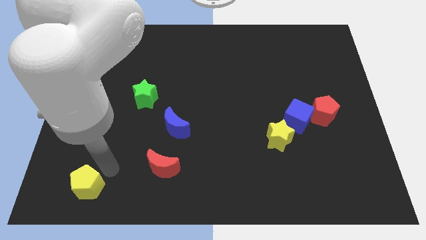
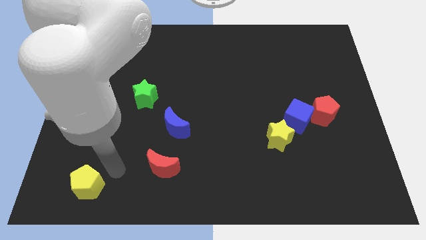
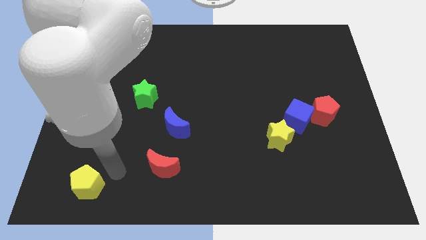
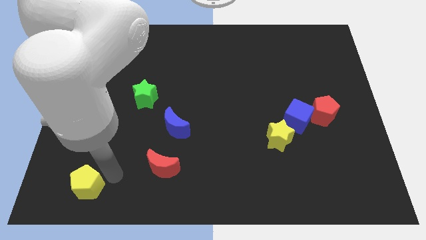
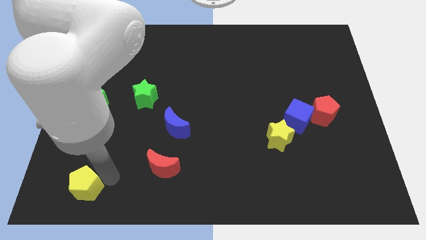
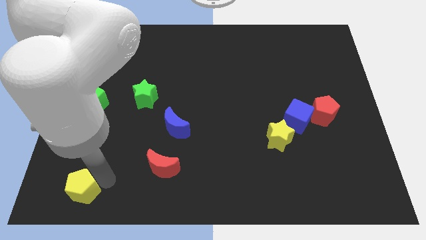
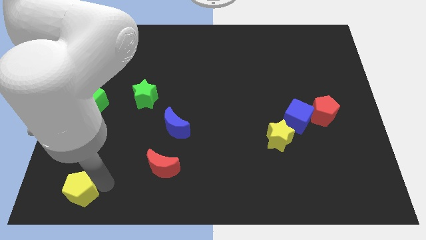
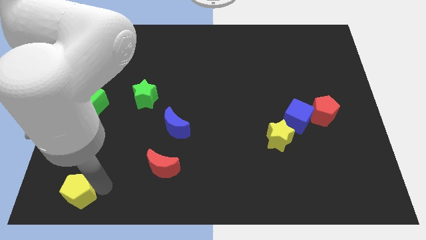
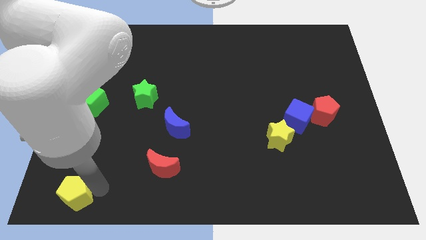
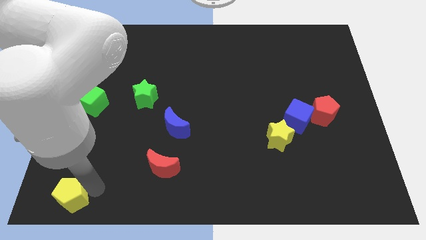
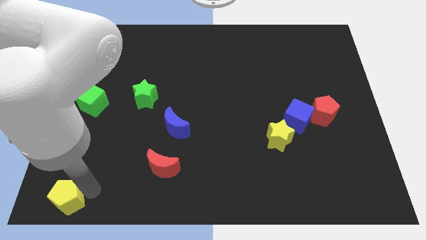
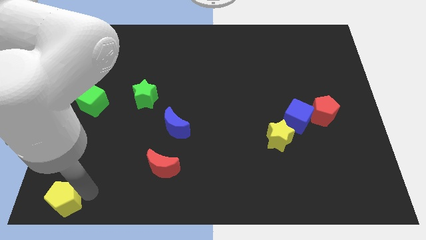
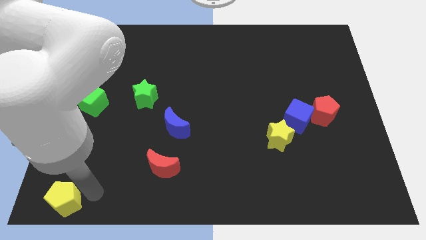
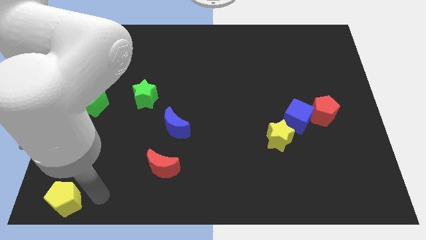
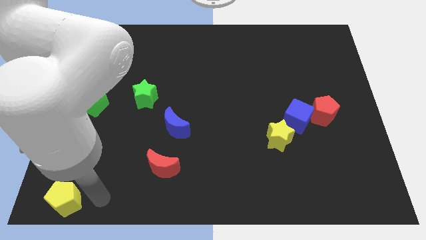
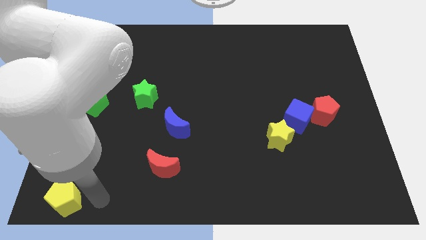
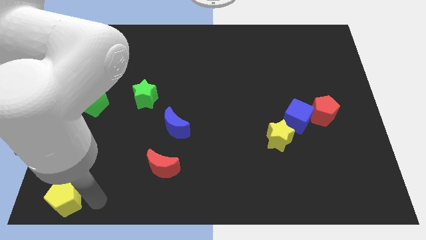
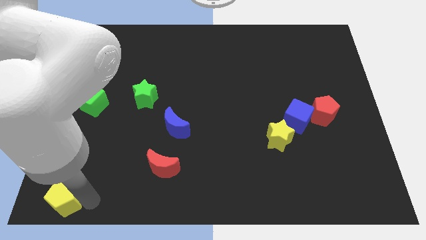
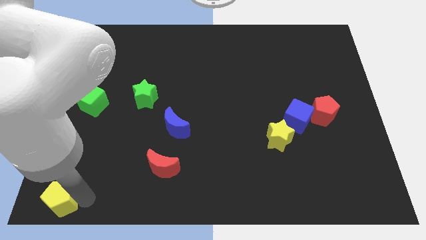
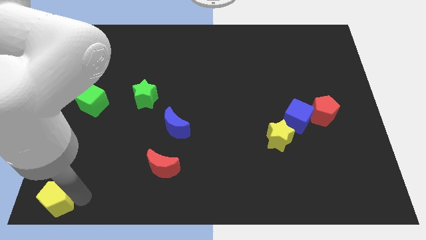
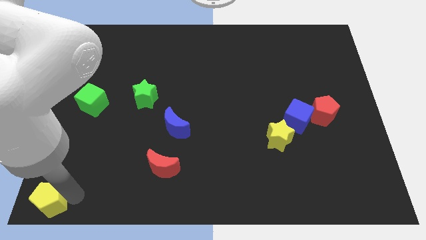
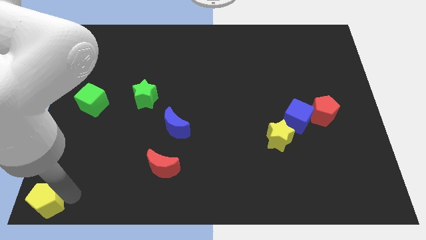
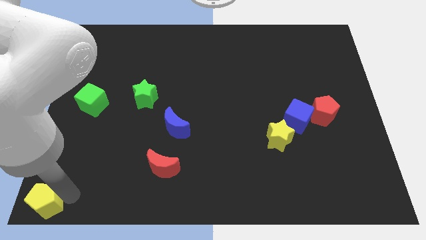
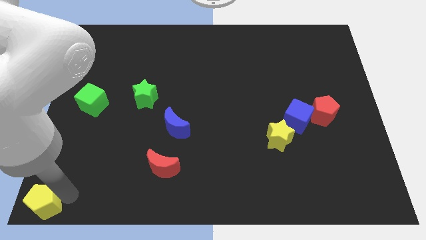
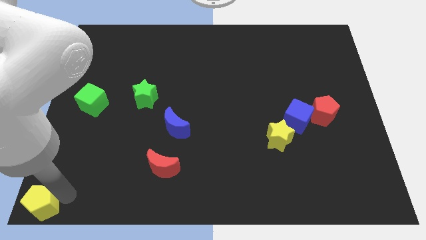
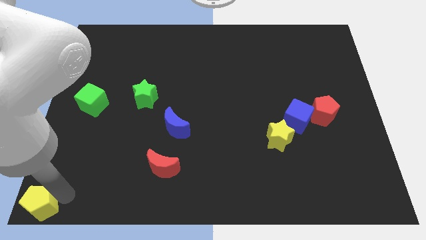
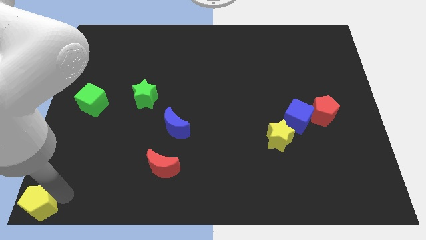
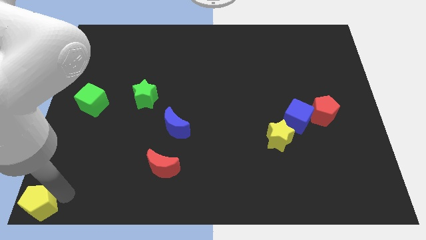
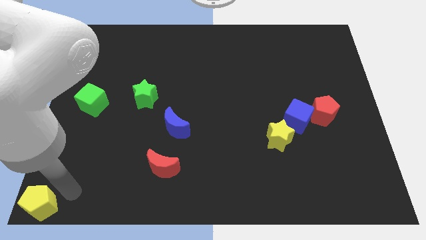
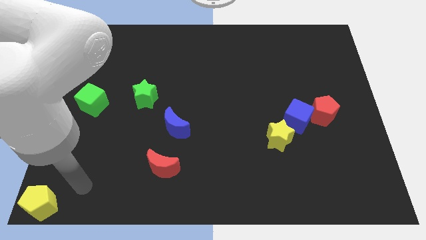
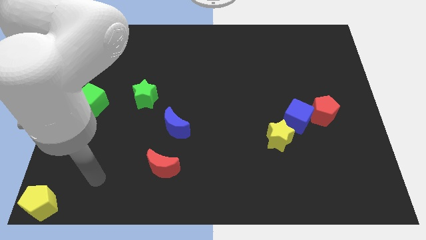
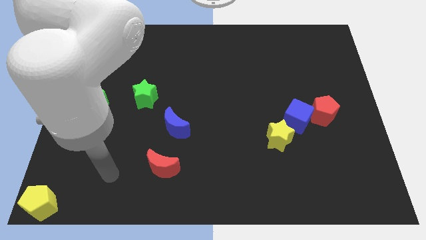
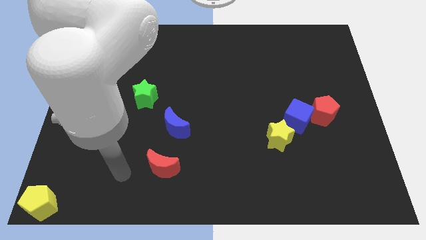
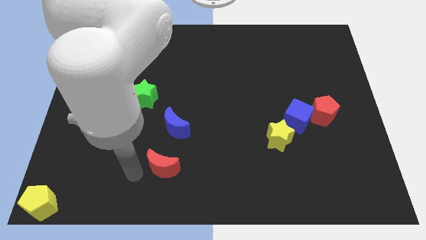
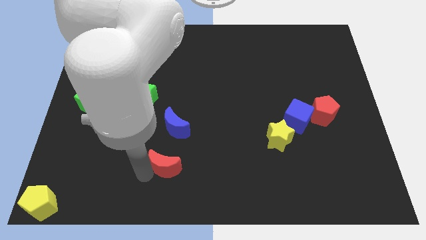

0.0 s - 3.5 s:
move the yellow pentagon towards the bottom left corner of the board

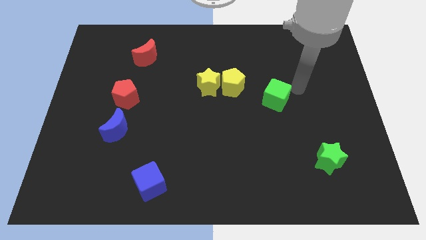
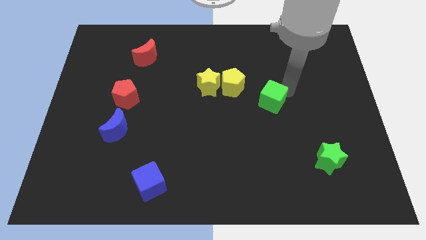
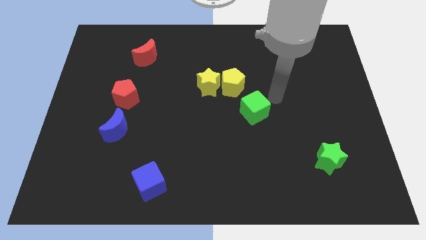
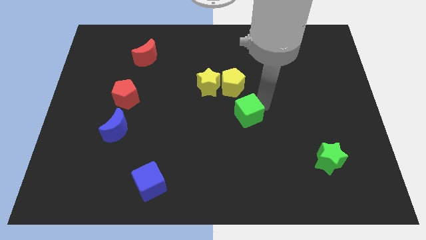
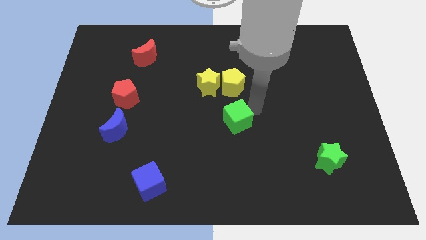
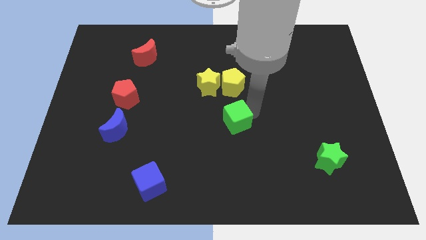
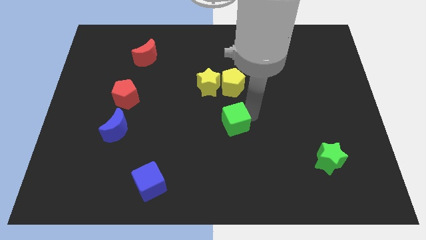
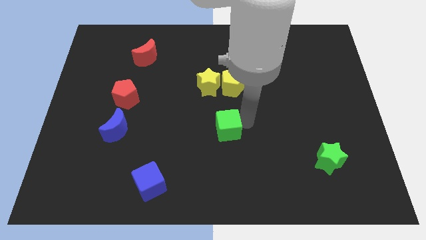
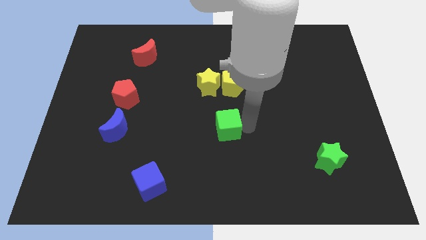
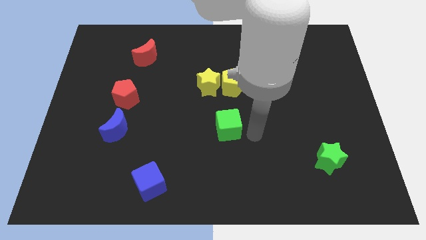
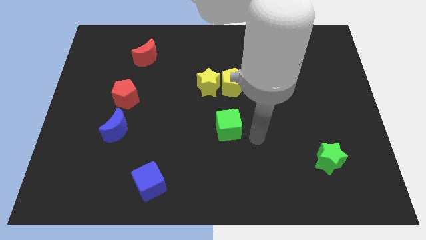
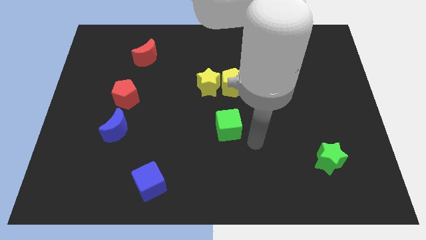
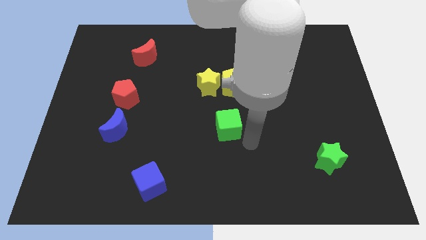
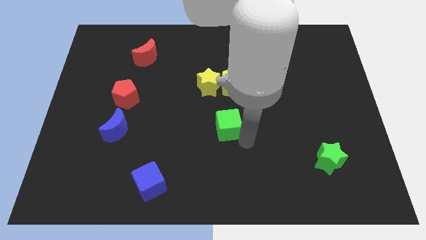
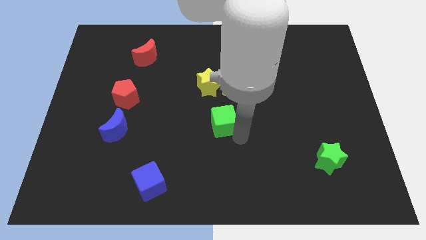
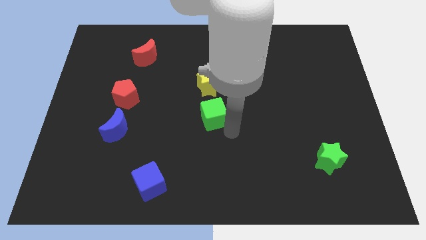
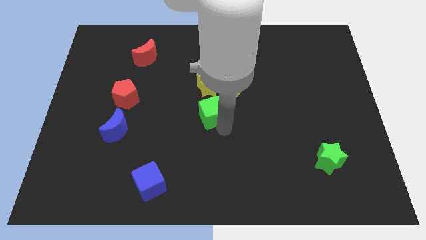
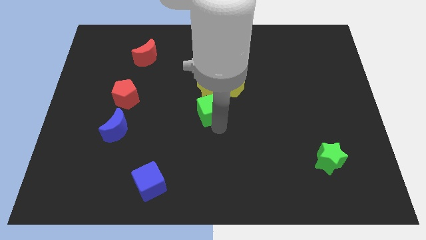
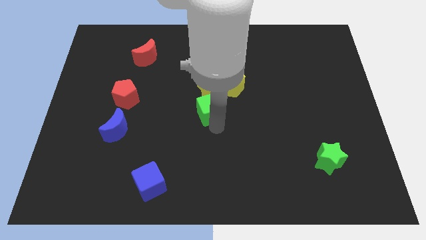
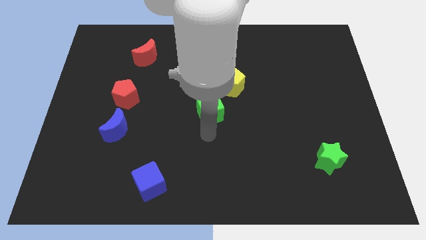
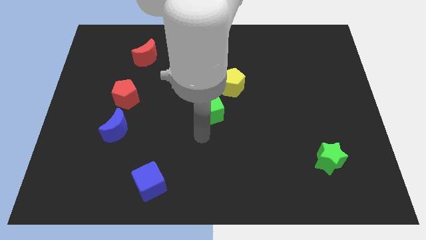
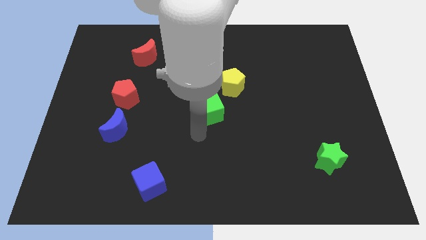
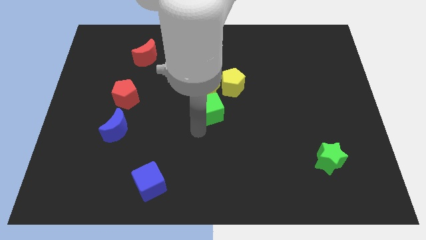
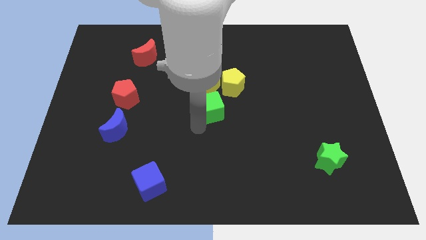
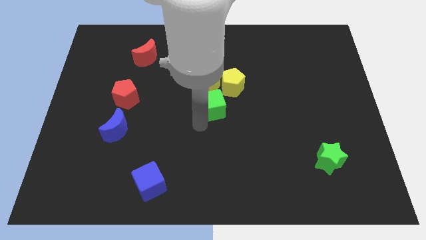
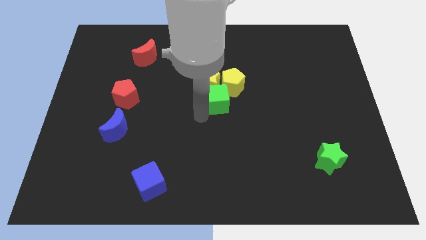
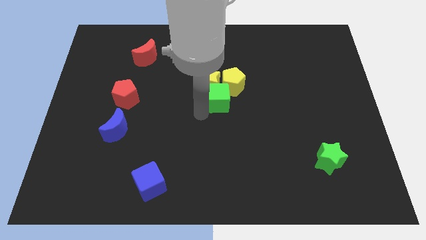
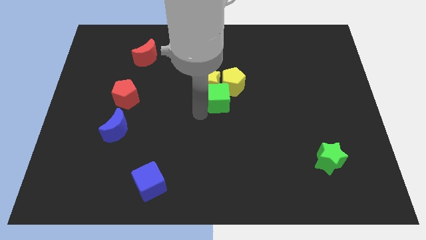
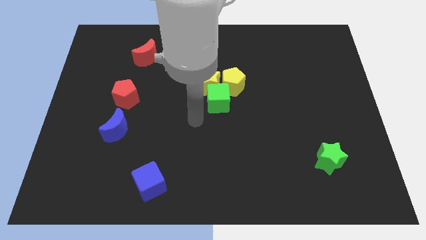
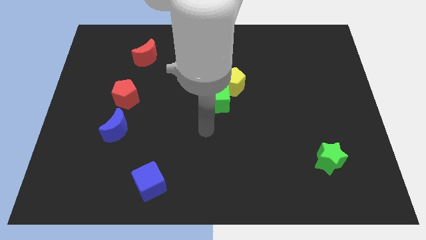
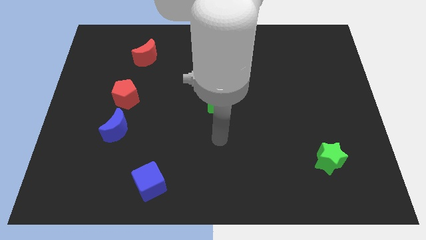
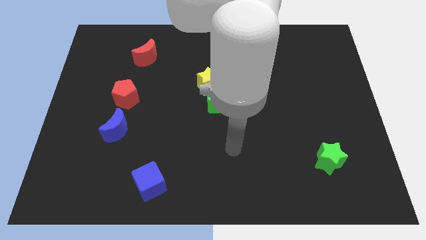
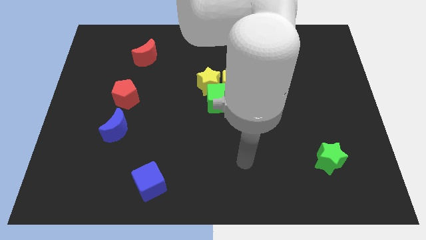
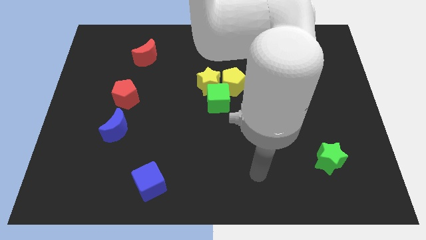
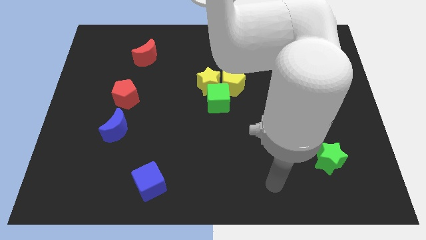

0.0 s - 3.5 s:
push the green cube into the group of yellow blocks

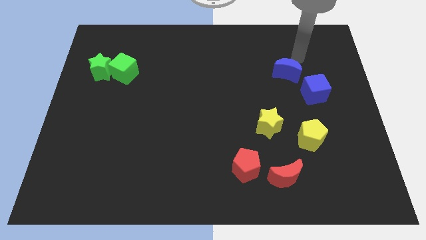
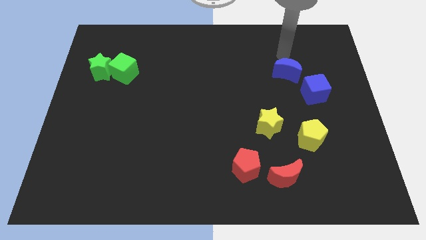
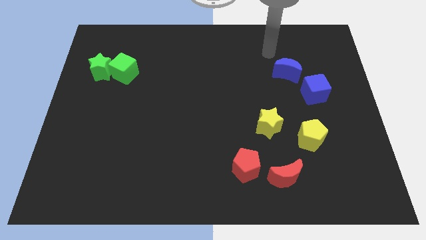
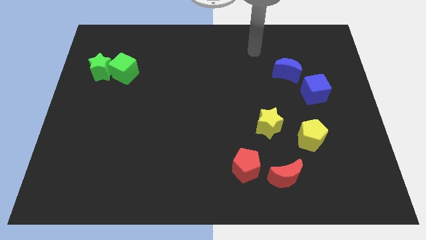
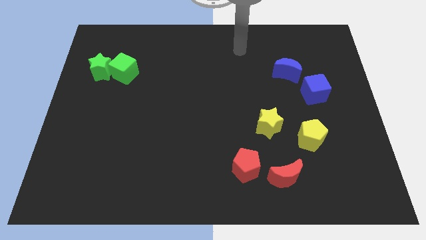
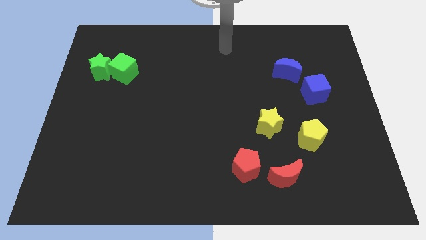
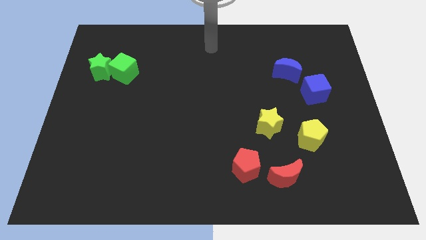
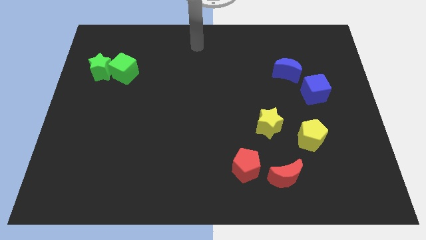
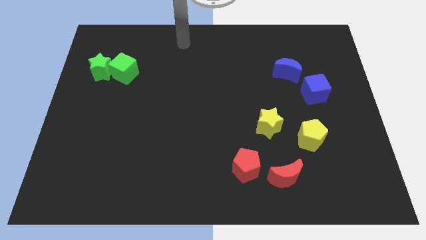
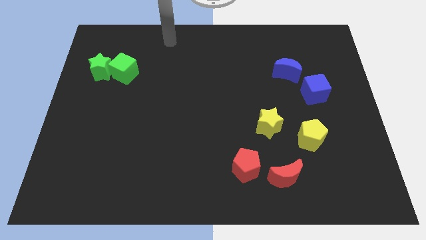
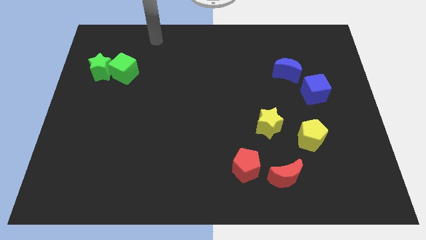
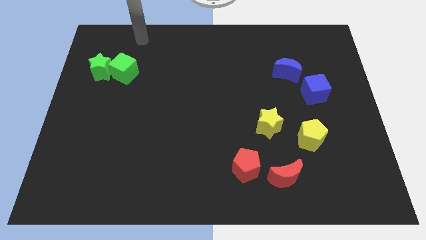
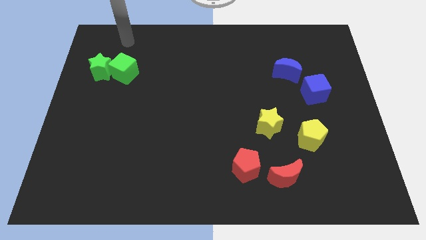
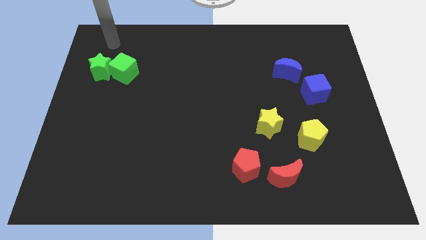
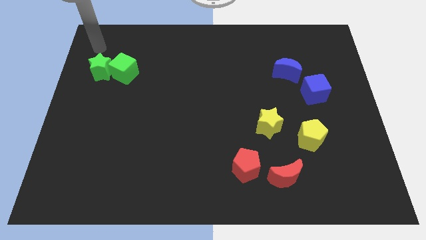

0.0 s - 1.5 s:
place your hand at the top left corner

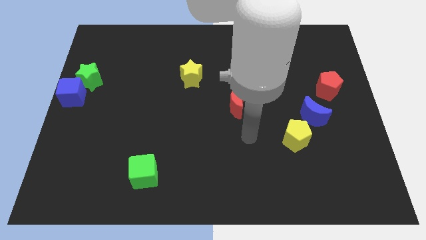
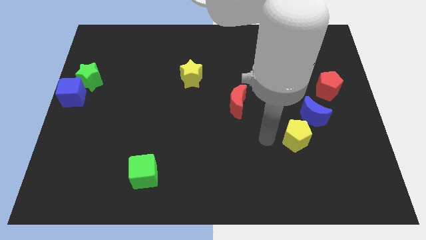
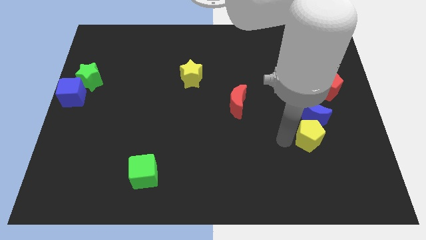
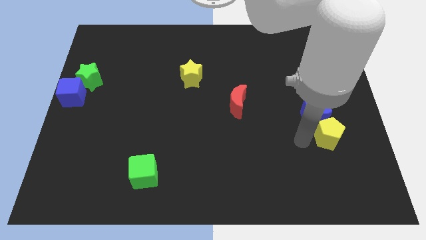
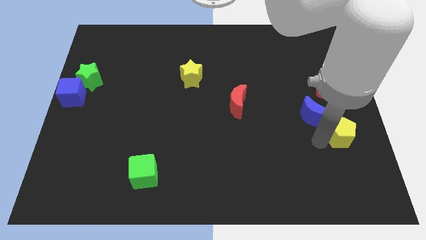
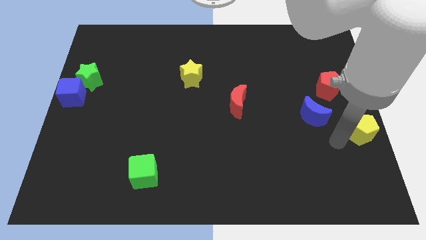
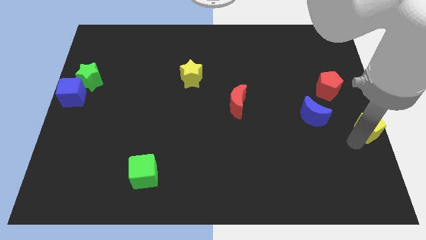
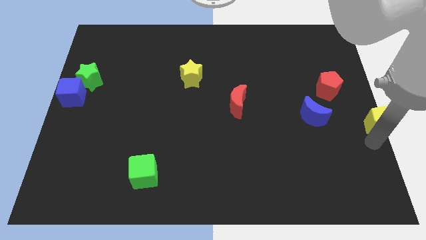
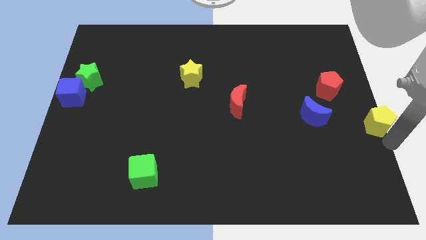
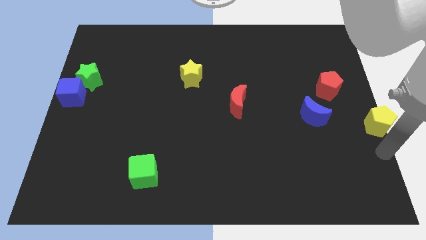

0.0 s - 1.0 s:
push the yellow pentagon to the center right
